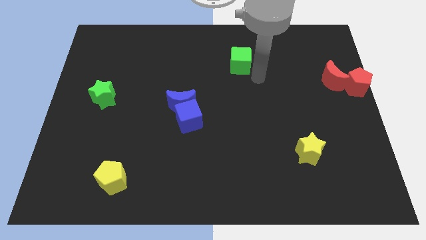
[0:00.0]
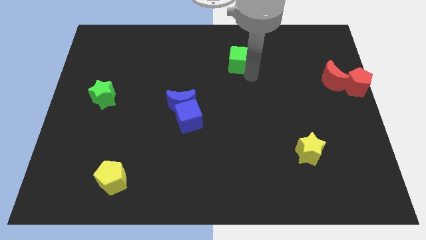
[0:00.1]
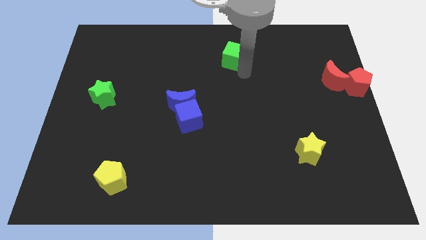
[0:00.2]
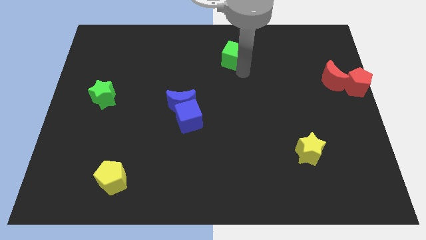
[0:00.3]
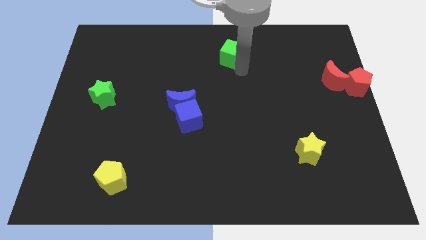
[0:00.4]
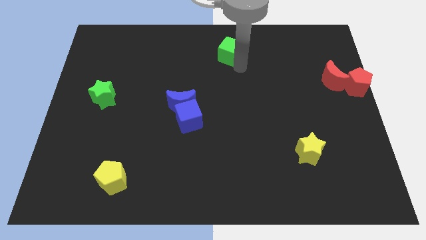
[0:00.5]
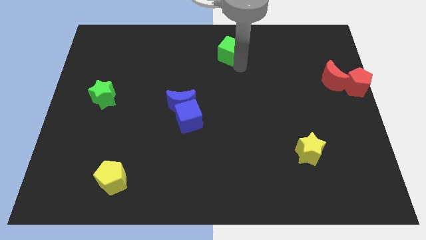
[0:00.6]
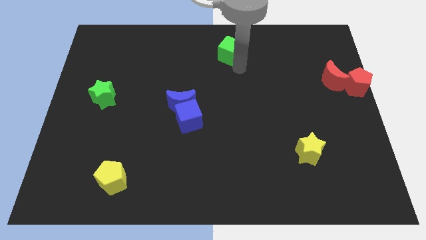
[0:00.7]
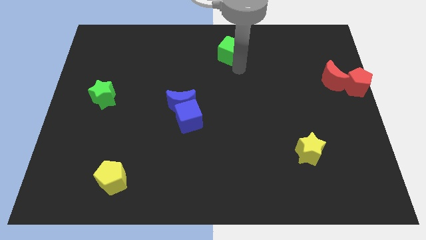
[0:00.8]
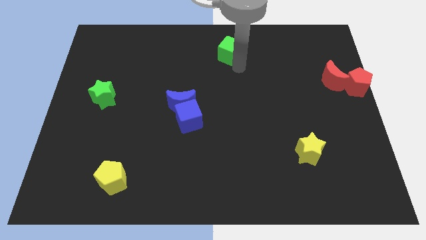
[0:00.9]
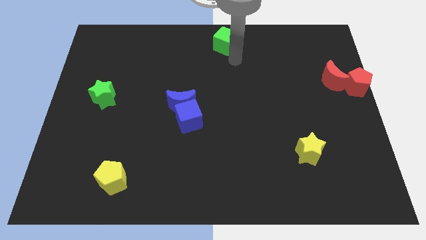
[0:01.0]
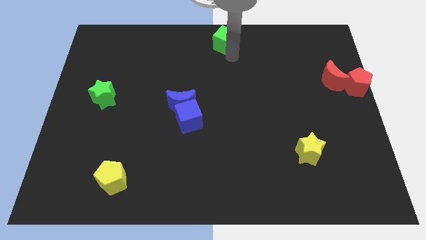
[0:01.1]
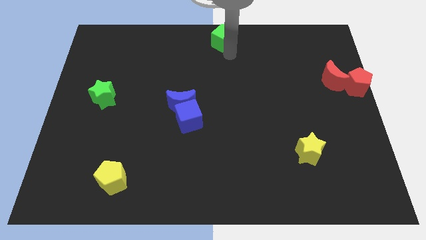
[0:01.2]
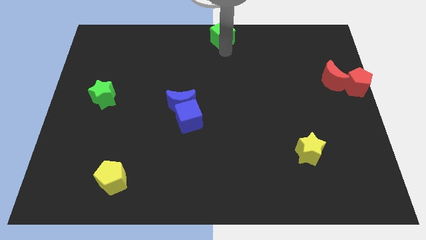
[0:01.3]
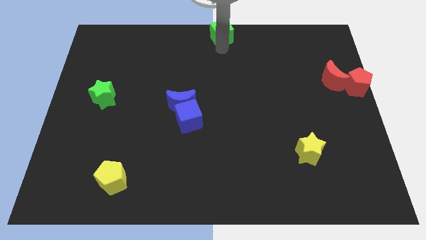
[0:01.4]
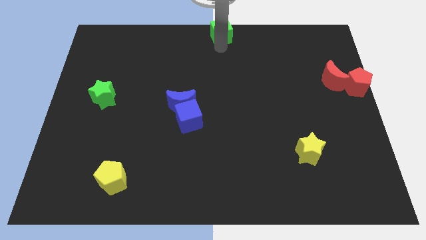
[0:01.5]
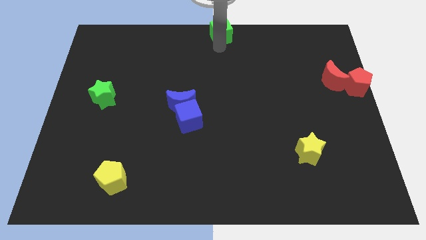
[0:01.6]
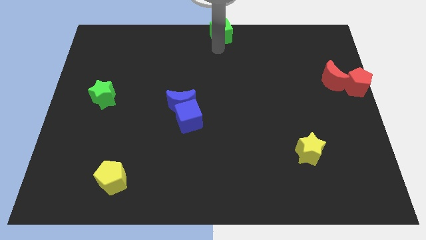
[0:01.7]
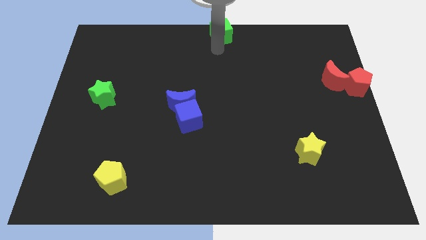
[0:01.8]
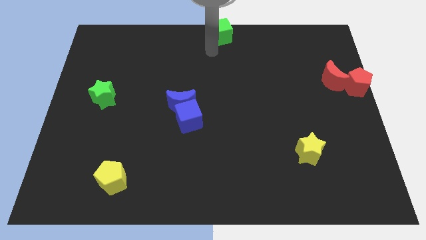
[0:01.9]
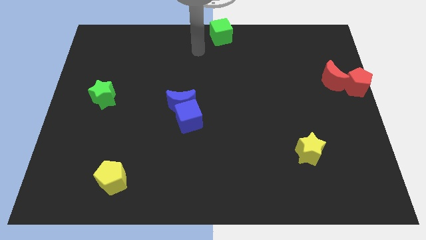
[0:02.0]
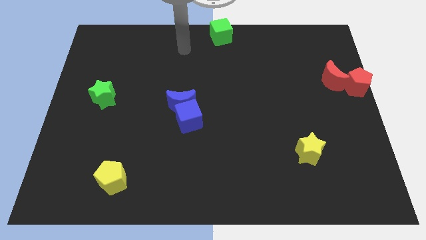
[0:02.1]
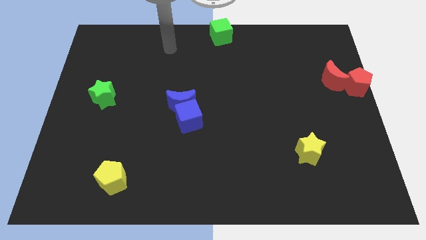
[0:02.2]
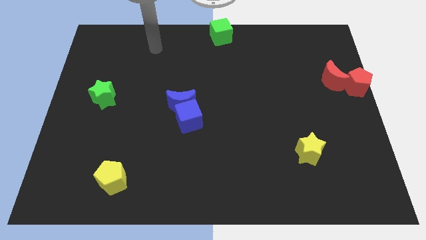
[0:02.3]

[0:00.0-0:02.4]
move the green cube to the top center

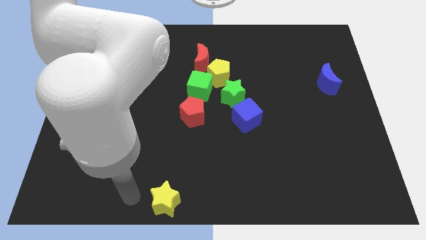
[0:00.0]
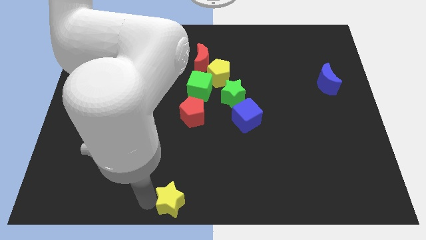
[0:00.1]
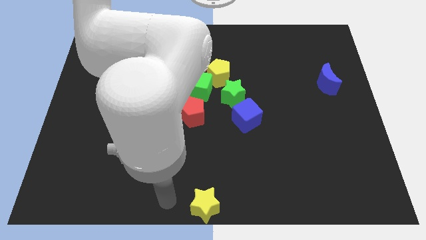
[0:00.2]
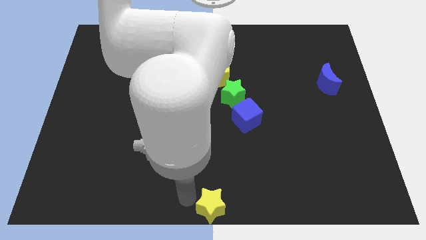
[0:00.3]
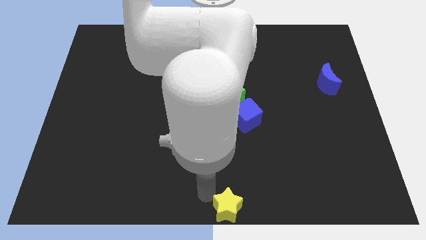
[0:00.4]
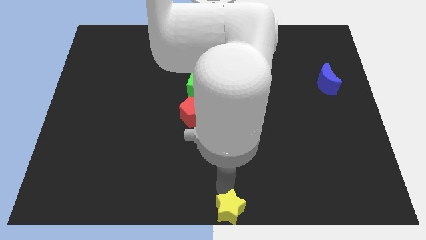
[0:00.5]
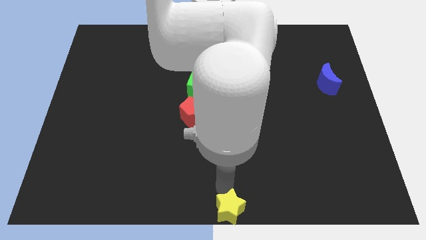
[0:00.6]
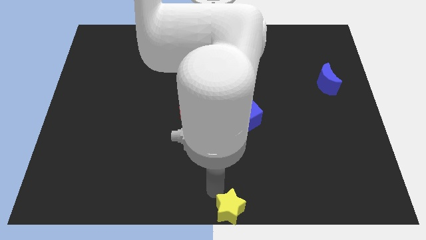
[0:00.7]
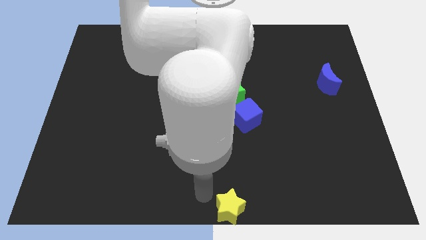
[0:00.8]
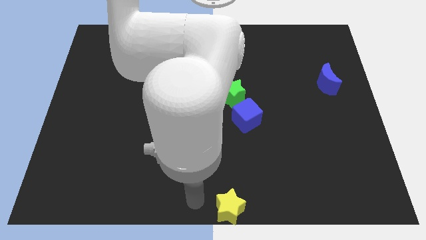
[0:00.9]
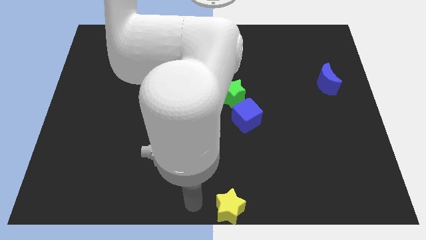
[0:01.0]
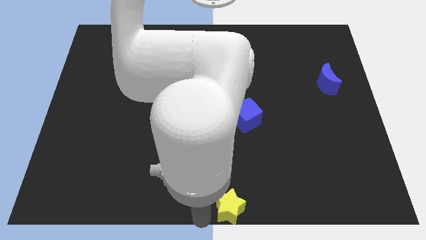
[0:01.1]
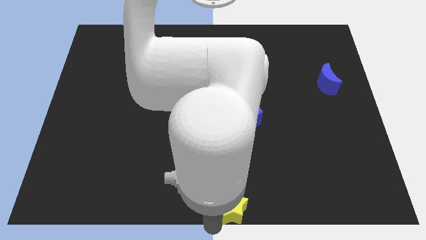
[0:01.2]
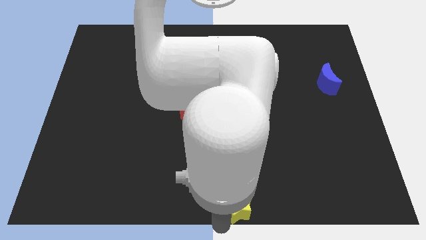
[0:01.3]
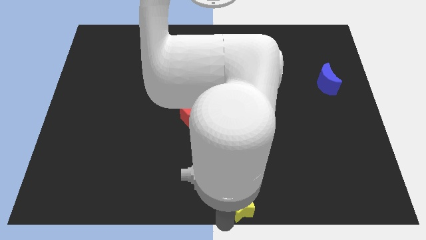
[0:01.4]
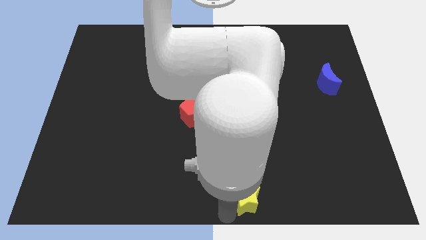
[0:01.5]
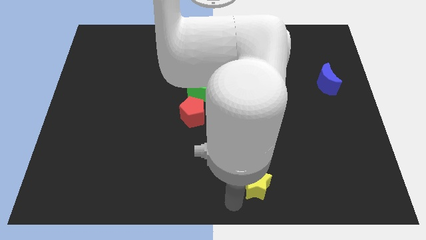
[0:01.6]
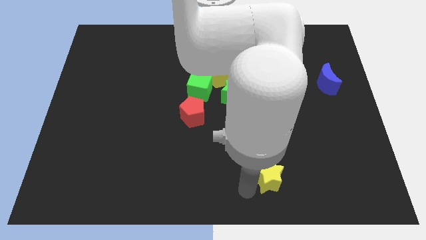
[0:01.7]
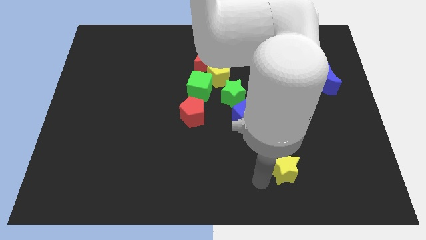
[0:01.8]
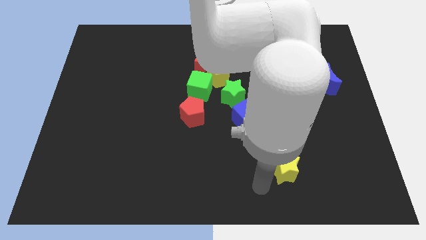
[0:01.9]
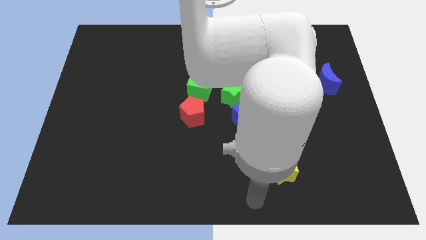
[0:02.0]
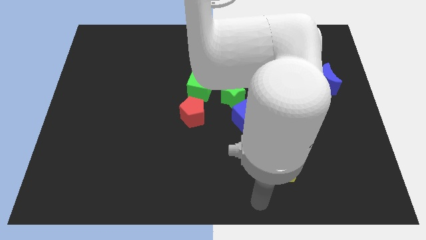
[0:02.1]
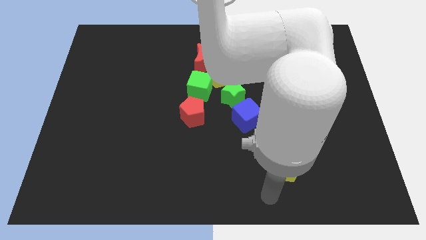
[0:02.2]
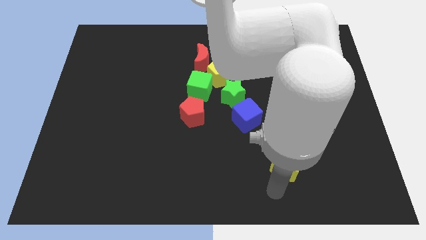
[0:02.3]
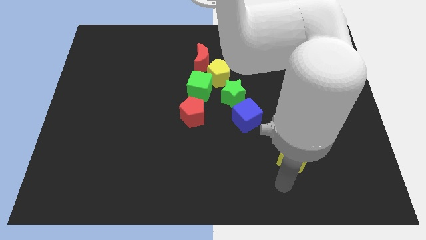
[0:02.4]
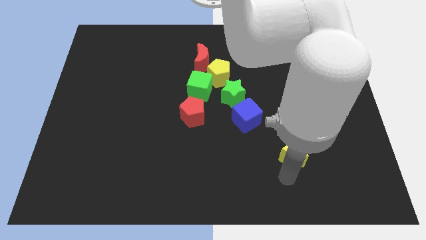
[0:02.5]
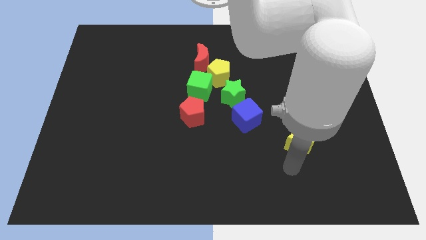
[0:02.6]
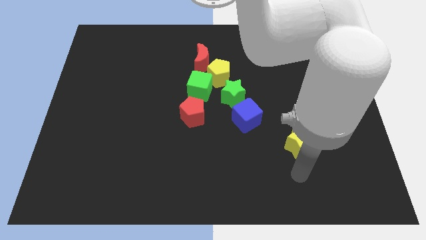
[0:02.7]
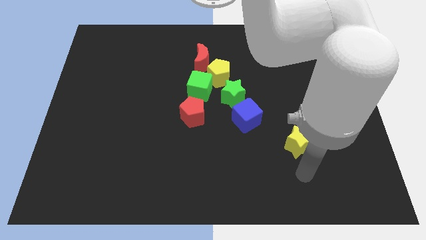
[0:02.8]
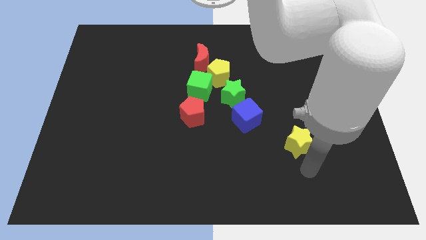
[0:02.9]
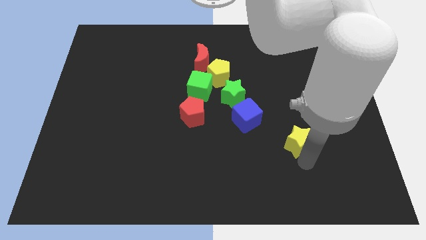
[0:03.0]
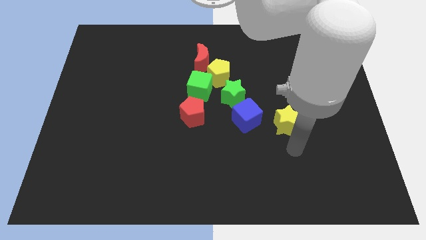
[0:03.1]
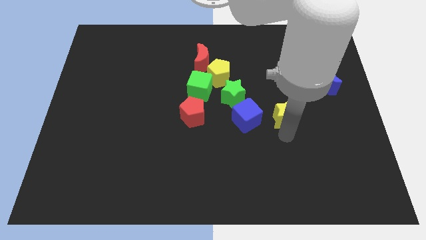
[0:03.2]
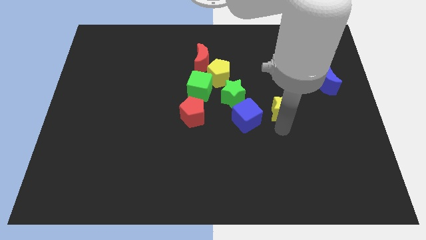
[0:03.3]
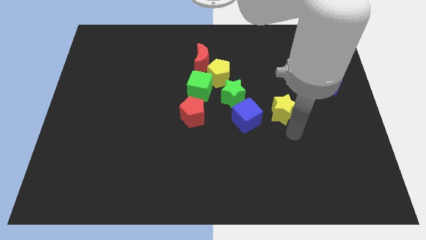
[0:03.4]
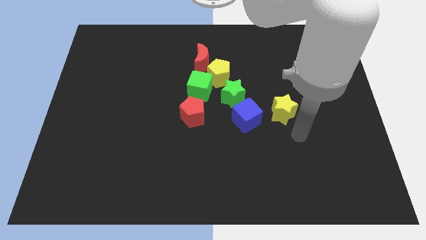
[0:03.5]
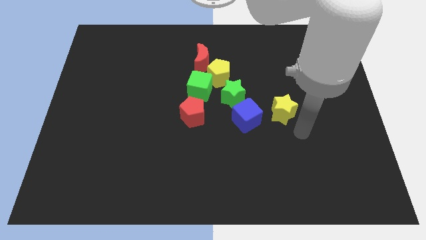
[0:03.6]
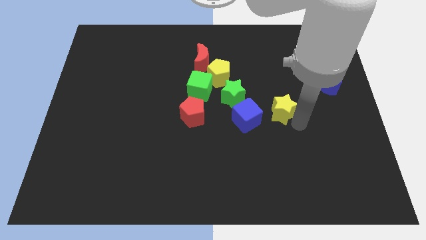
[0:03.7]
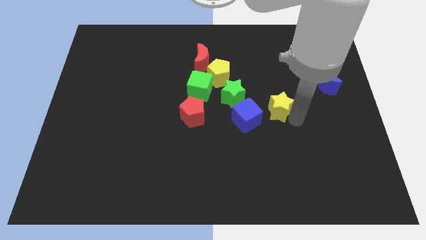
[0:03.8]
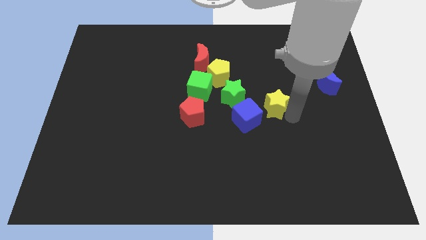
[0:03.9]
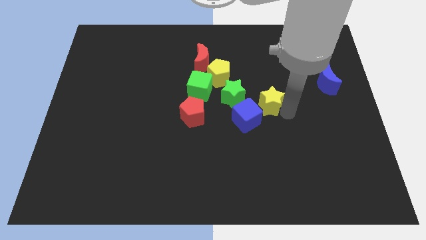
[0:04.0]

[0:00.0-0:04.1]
move the yellow star to the right of green star

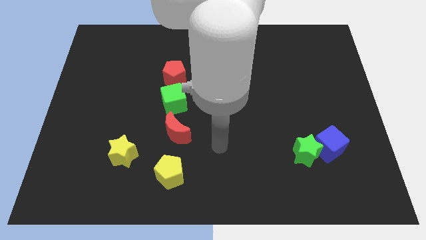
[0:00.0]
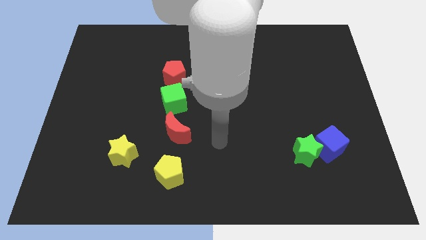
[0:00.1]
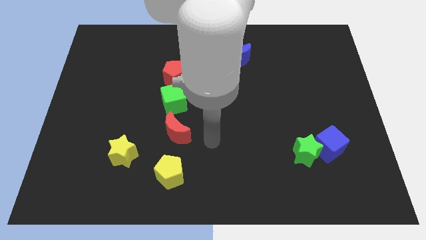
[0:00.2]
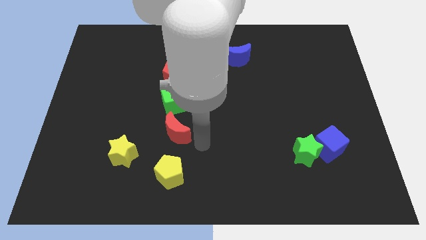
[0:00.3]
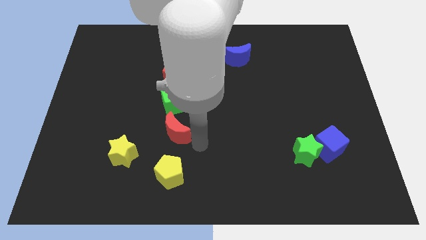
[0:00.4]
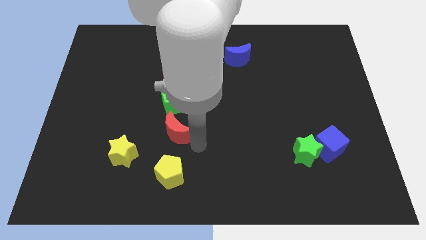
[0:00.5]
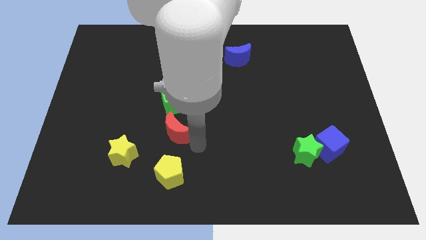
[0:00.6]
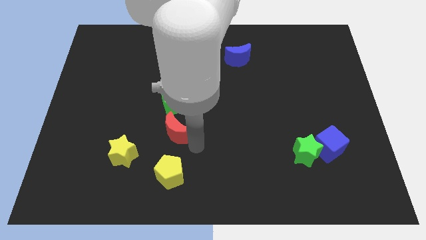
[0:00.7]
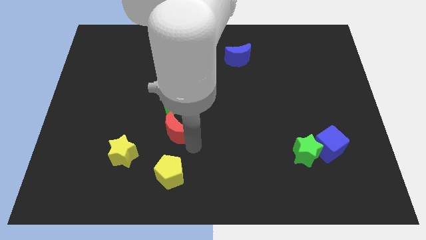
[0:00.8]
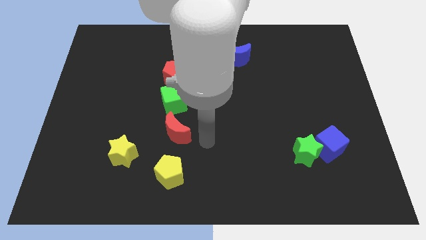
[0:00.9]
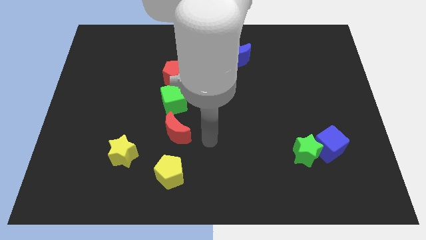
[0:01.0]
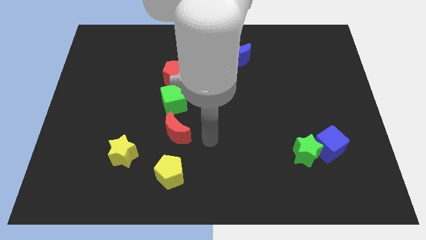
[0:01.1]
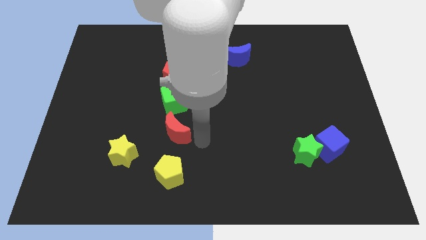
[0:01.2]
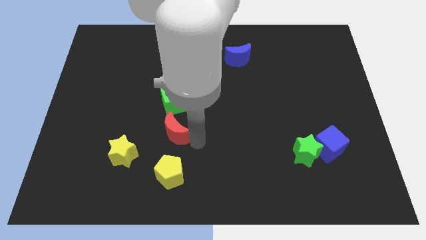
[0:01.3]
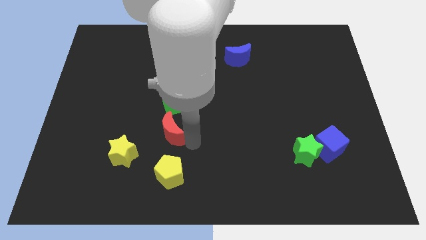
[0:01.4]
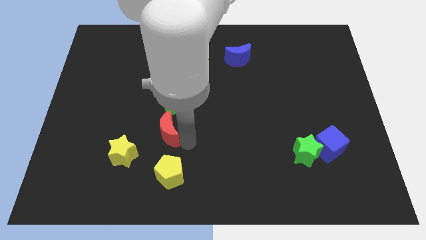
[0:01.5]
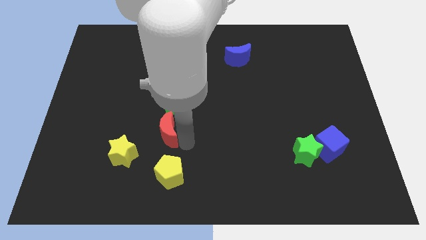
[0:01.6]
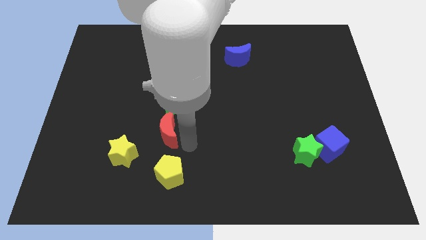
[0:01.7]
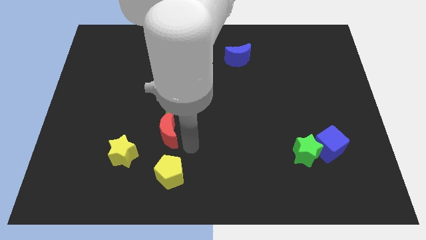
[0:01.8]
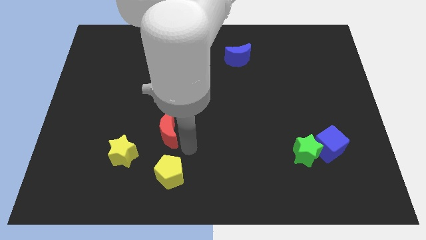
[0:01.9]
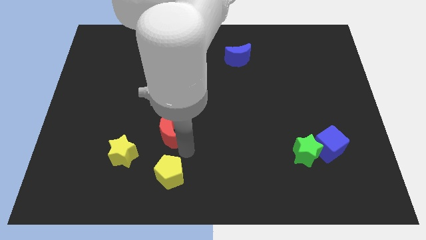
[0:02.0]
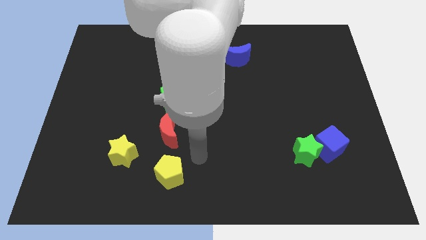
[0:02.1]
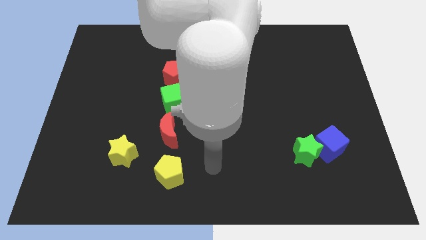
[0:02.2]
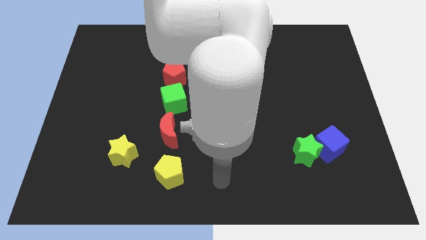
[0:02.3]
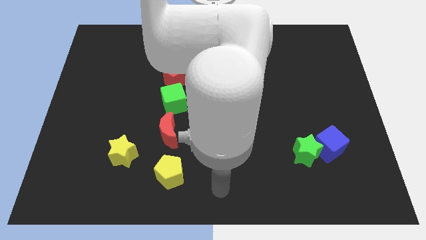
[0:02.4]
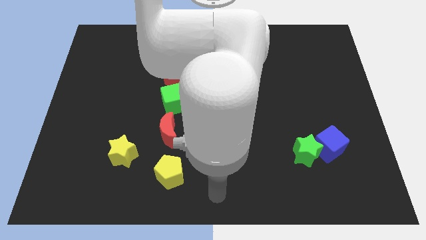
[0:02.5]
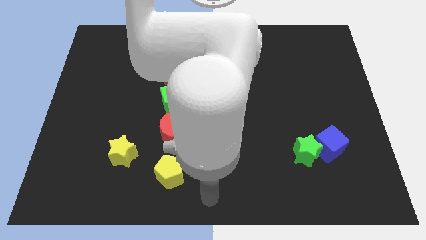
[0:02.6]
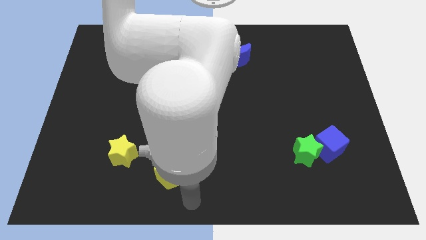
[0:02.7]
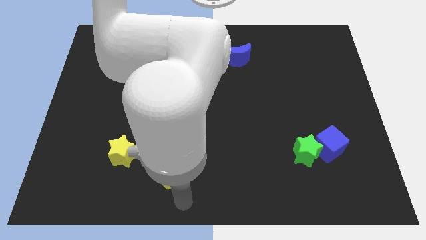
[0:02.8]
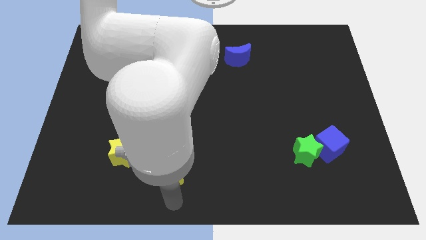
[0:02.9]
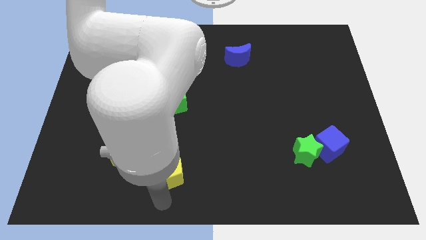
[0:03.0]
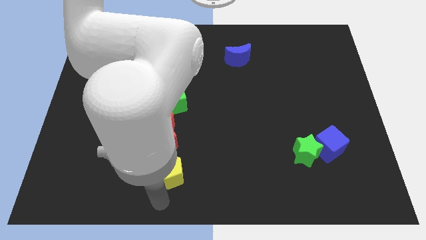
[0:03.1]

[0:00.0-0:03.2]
push red moon slightly towards left
